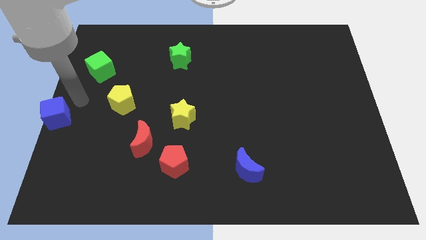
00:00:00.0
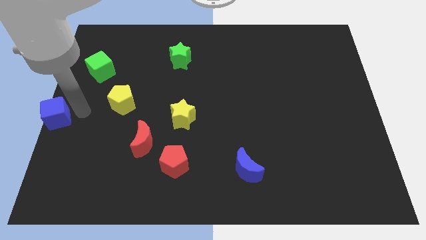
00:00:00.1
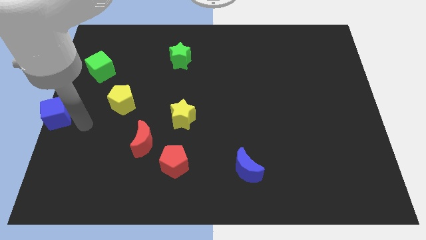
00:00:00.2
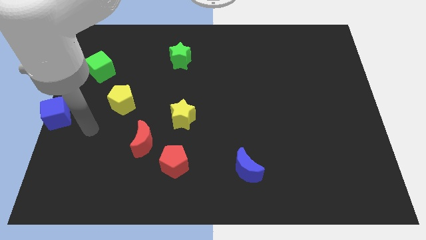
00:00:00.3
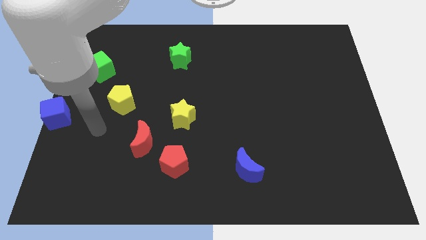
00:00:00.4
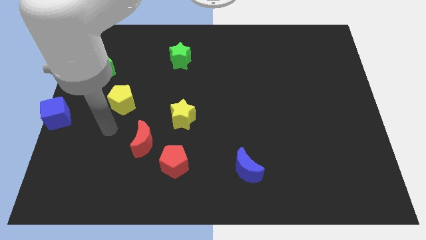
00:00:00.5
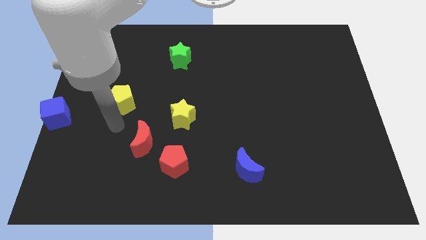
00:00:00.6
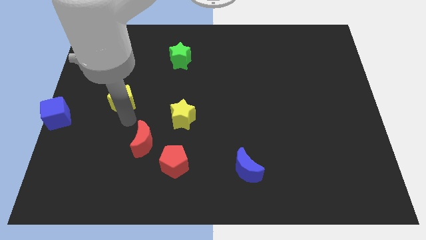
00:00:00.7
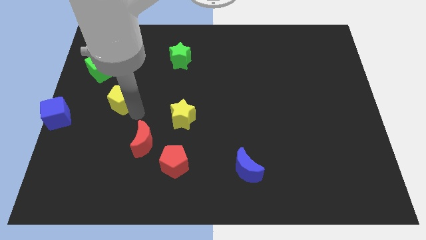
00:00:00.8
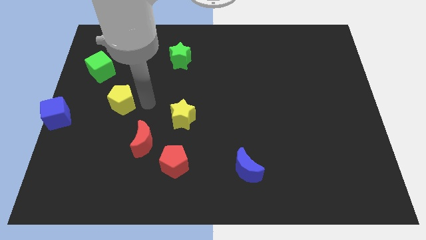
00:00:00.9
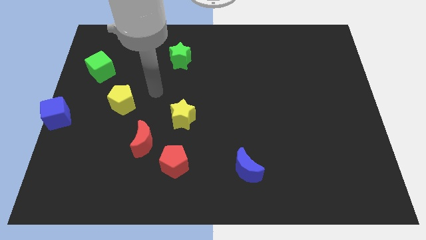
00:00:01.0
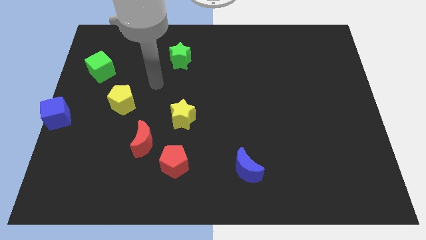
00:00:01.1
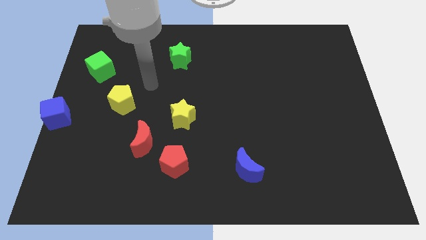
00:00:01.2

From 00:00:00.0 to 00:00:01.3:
move your arm away from blue cube

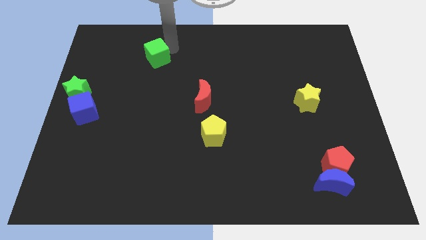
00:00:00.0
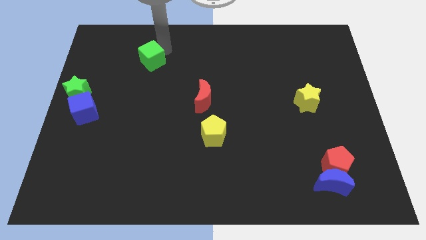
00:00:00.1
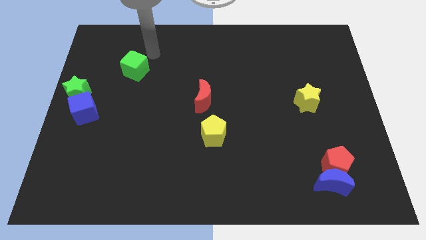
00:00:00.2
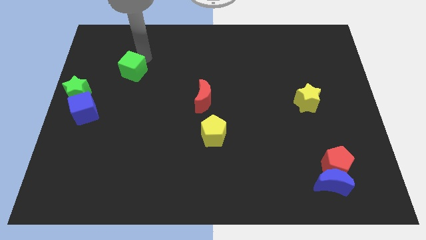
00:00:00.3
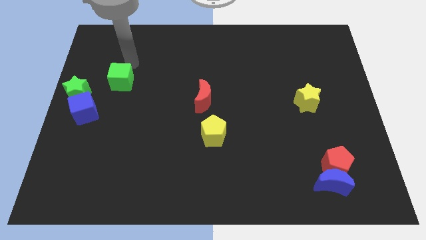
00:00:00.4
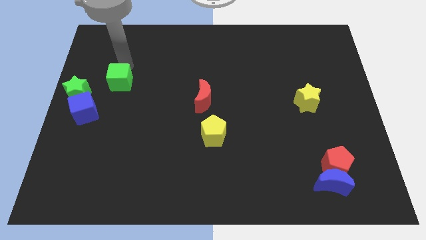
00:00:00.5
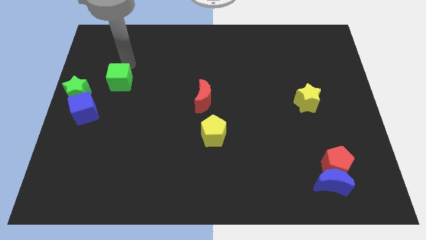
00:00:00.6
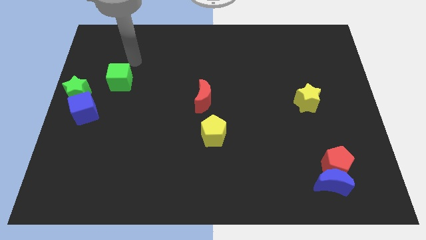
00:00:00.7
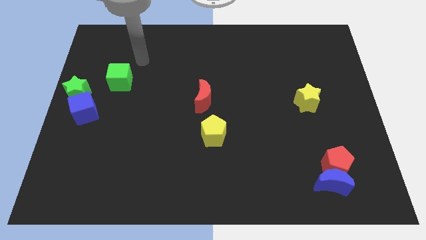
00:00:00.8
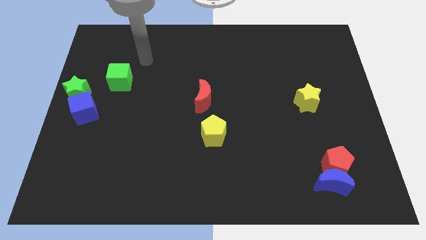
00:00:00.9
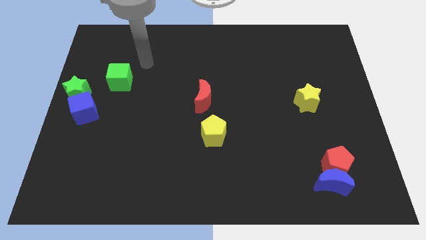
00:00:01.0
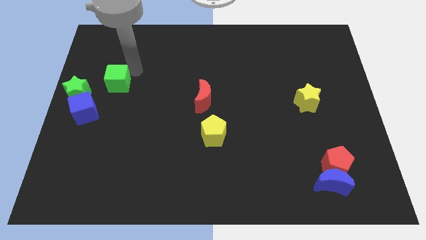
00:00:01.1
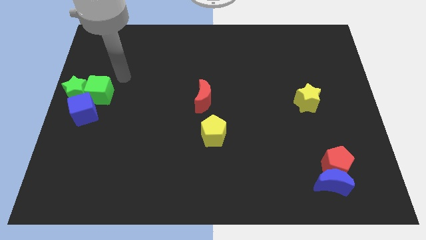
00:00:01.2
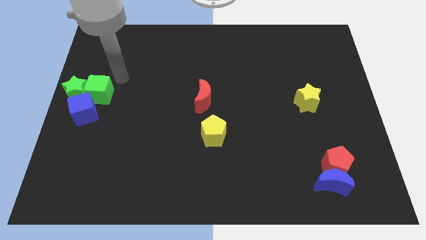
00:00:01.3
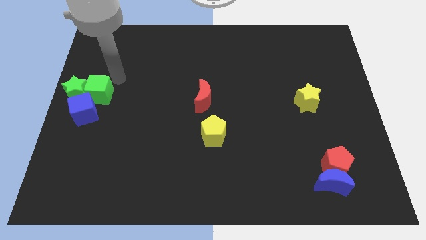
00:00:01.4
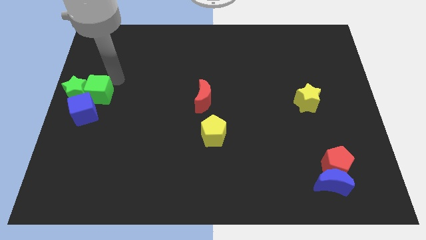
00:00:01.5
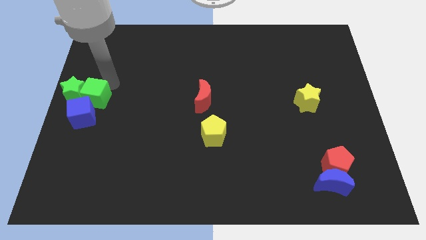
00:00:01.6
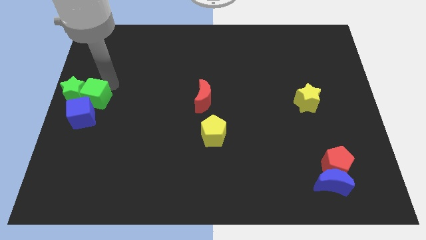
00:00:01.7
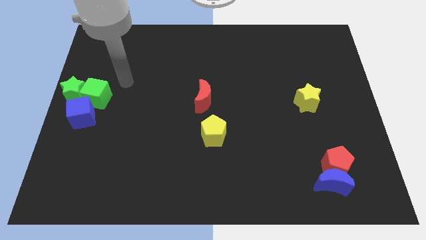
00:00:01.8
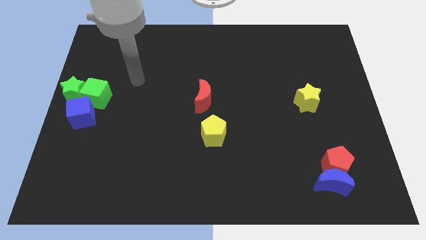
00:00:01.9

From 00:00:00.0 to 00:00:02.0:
push the green cube into the blue cube

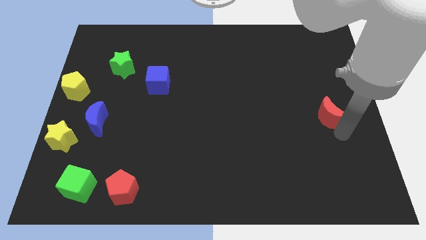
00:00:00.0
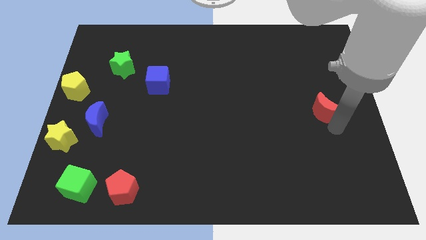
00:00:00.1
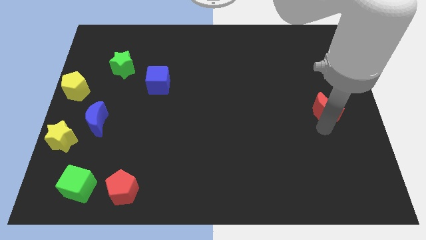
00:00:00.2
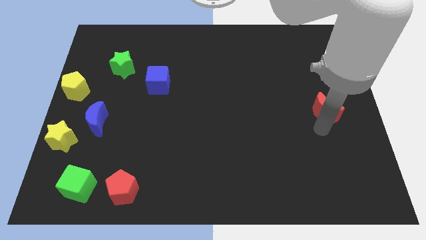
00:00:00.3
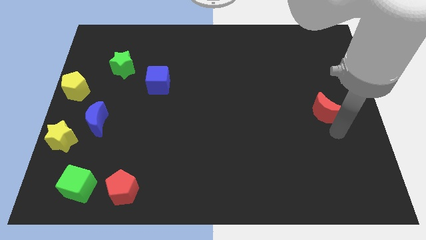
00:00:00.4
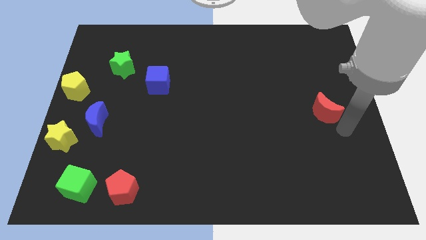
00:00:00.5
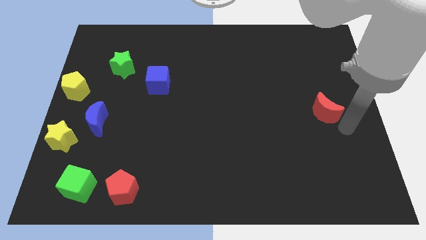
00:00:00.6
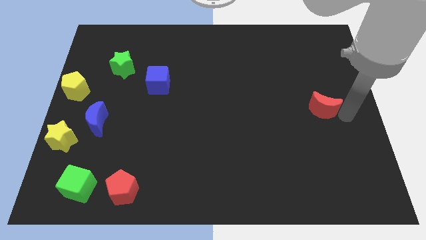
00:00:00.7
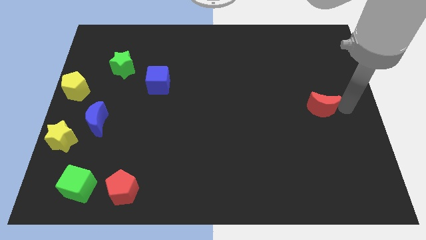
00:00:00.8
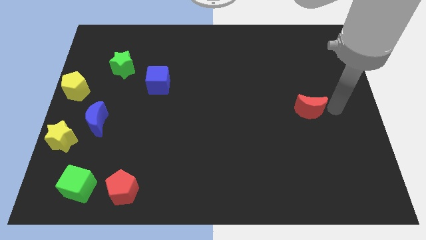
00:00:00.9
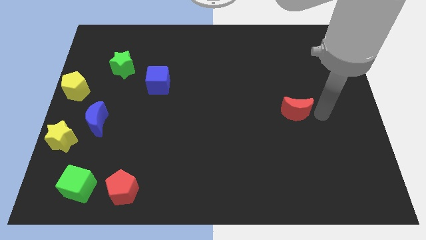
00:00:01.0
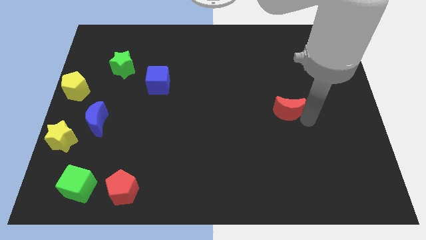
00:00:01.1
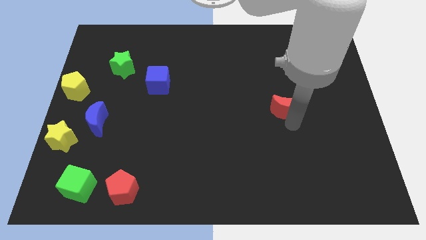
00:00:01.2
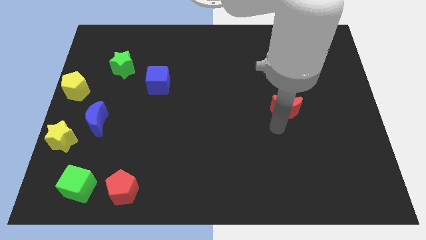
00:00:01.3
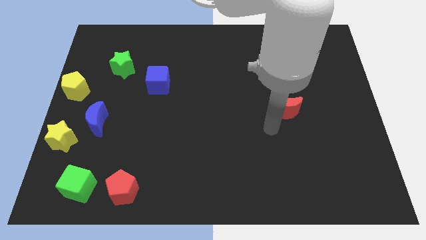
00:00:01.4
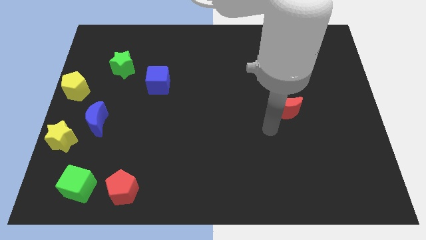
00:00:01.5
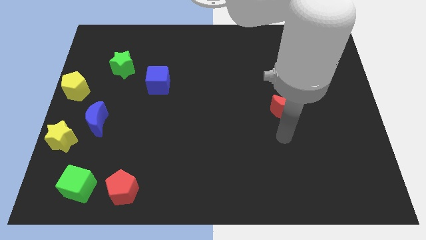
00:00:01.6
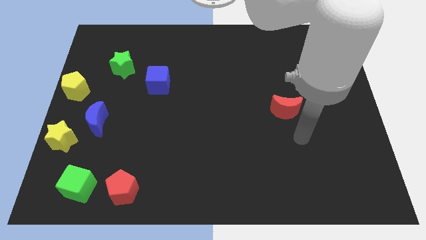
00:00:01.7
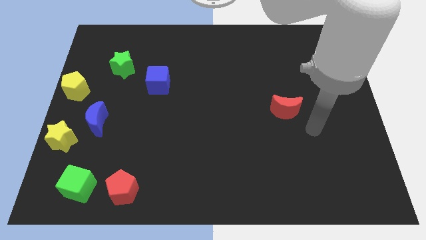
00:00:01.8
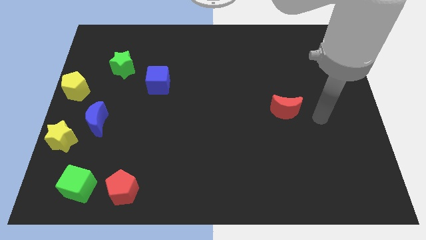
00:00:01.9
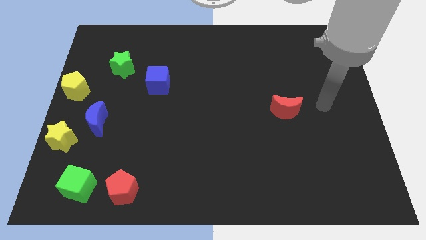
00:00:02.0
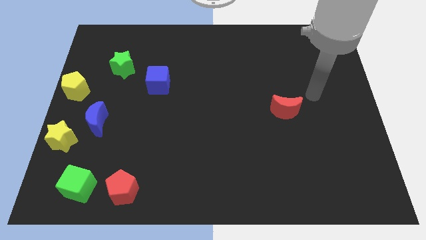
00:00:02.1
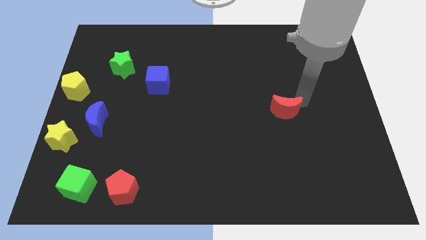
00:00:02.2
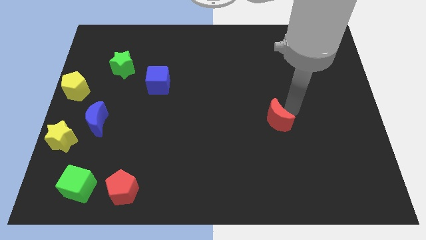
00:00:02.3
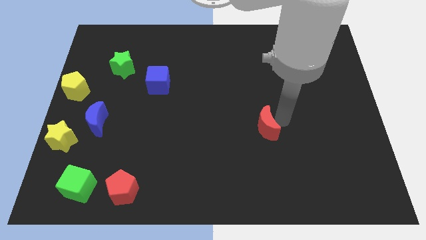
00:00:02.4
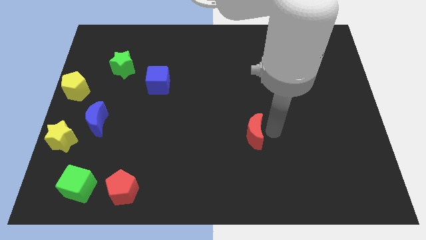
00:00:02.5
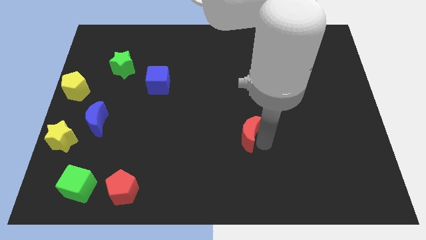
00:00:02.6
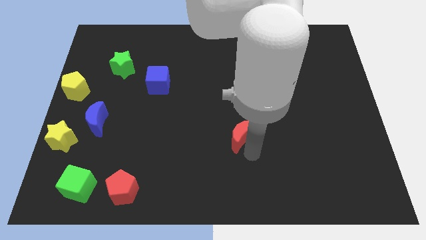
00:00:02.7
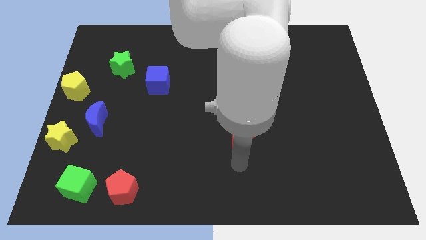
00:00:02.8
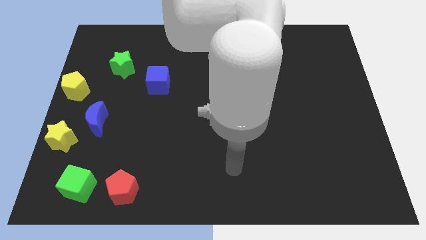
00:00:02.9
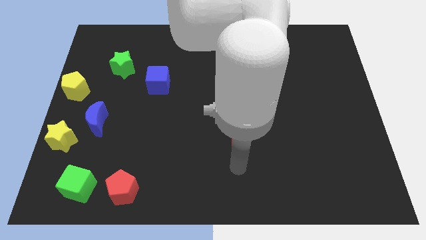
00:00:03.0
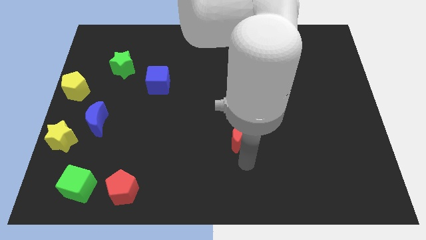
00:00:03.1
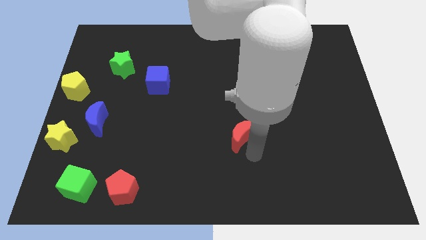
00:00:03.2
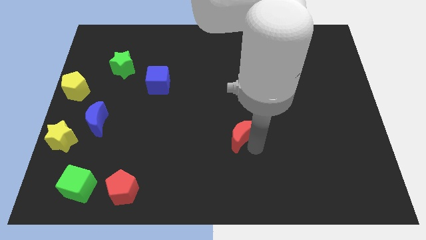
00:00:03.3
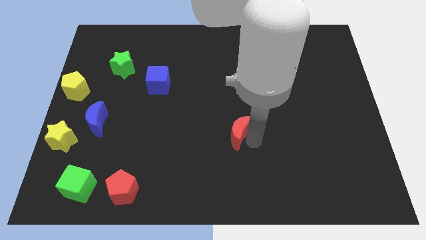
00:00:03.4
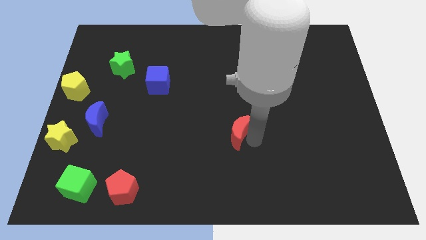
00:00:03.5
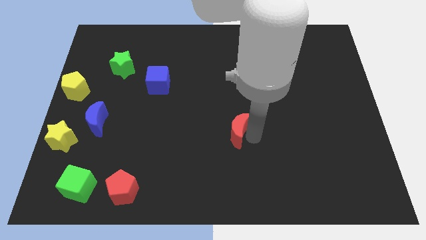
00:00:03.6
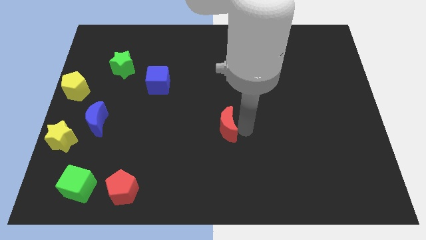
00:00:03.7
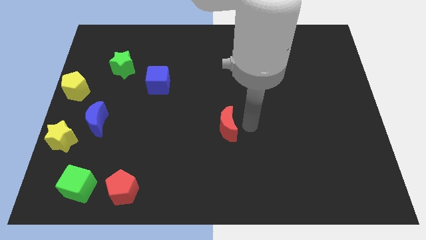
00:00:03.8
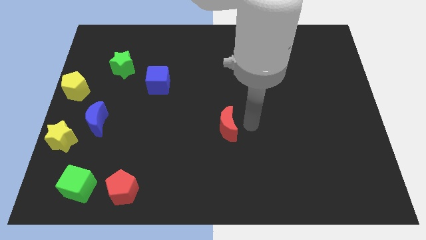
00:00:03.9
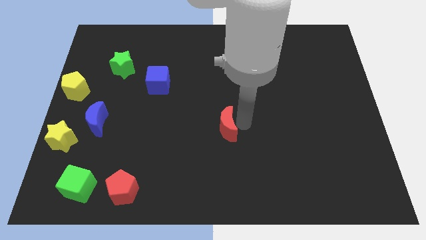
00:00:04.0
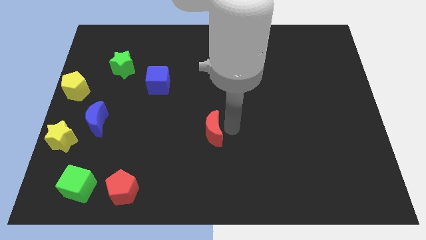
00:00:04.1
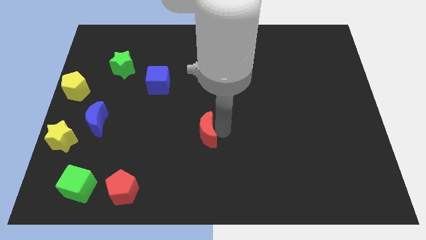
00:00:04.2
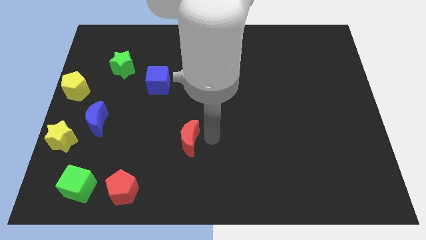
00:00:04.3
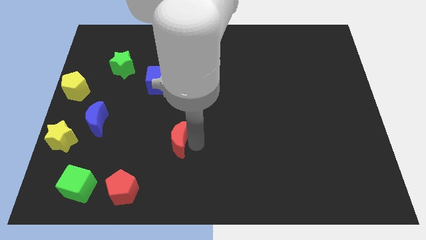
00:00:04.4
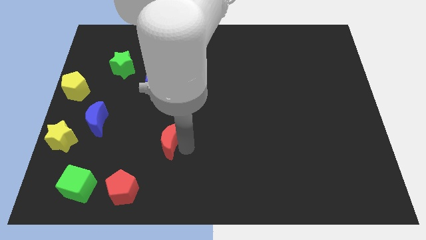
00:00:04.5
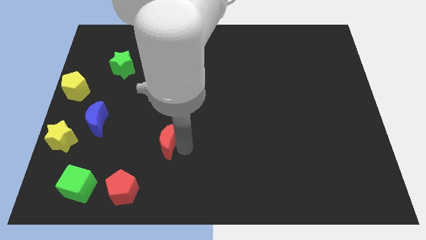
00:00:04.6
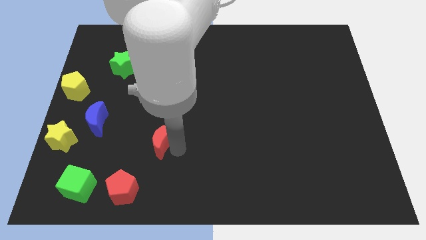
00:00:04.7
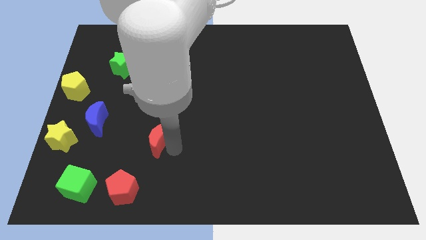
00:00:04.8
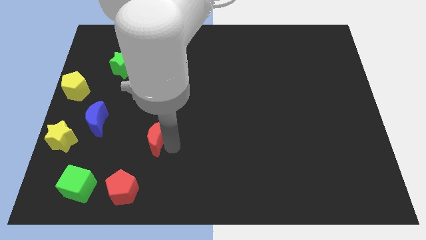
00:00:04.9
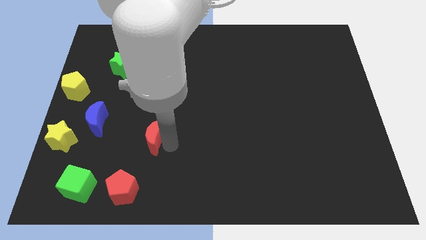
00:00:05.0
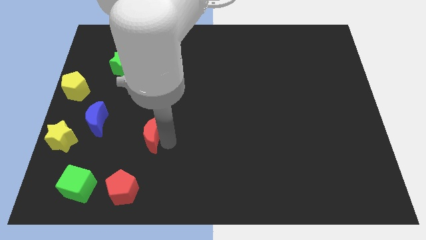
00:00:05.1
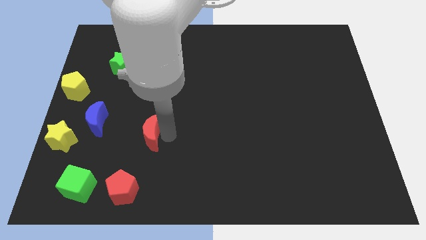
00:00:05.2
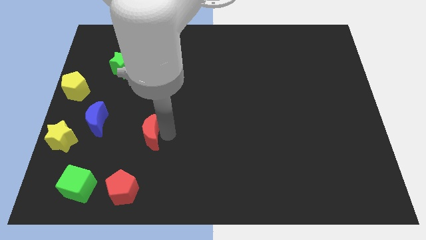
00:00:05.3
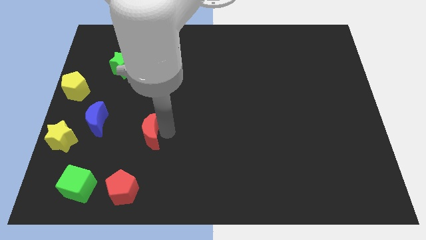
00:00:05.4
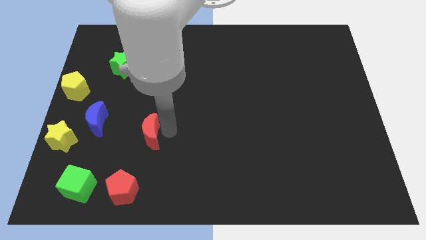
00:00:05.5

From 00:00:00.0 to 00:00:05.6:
push the red crescent towards the left of the board

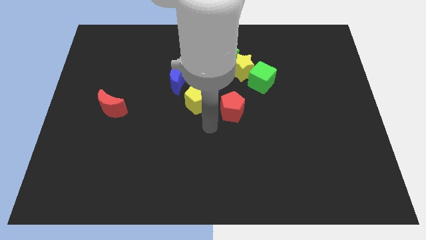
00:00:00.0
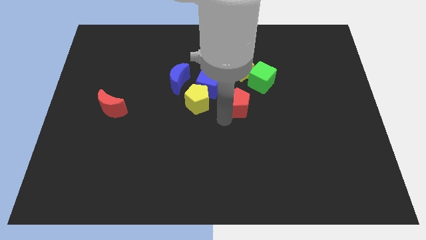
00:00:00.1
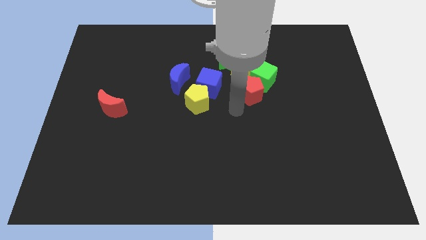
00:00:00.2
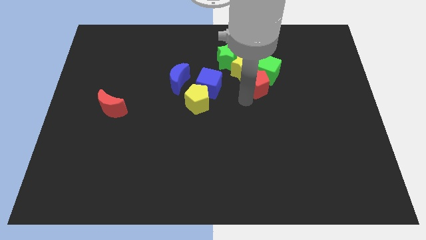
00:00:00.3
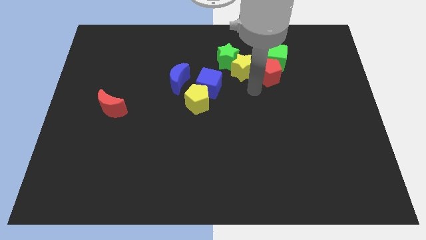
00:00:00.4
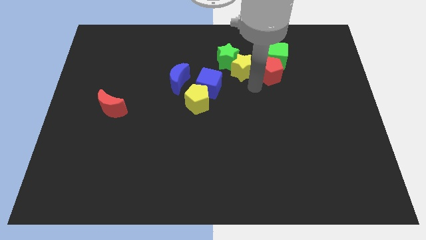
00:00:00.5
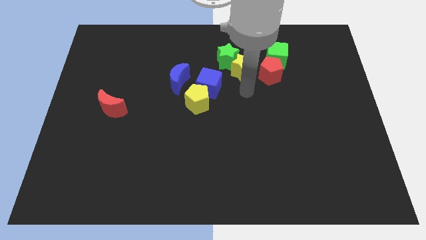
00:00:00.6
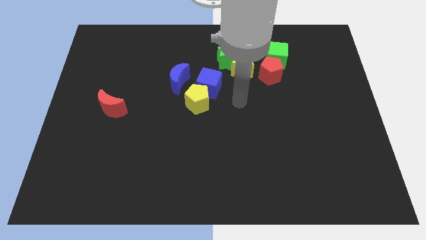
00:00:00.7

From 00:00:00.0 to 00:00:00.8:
place red pentagon to the bottom of green cube
